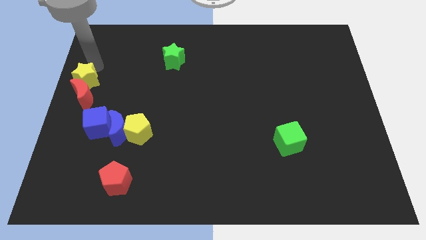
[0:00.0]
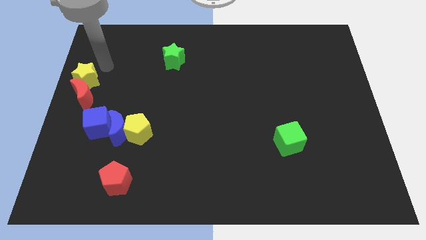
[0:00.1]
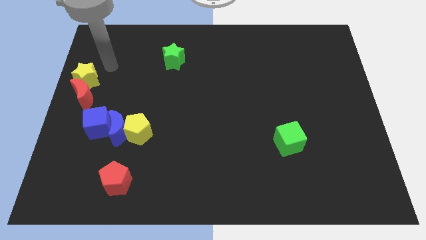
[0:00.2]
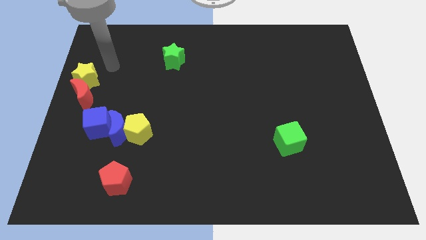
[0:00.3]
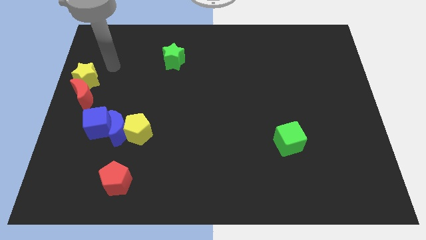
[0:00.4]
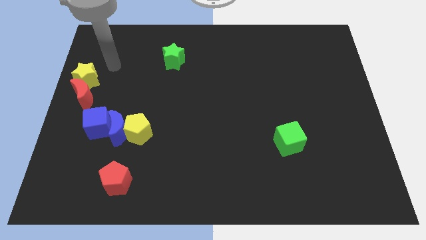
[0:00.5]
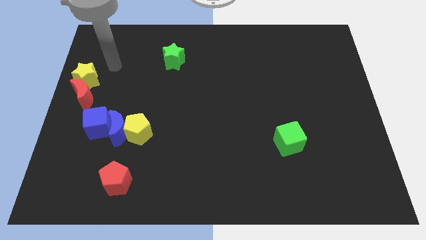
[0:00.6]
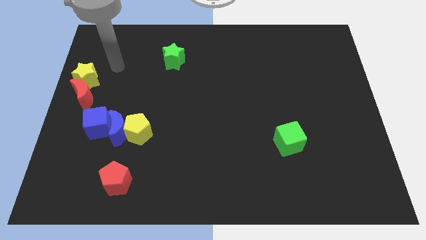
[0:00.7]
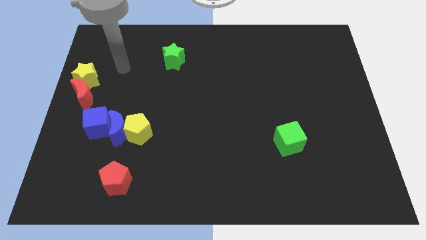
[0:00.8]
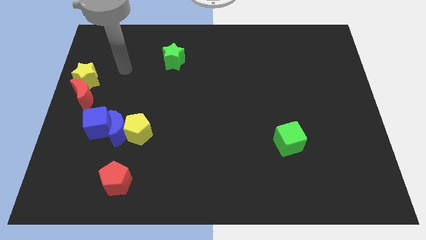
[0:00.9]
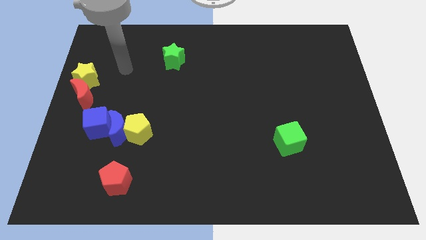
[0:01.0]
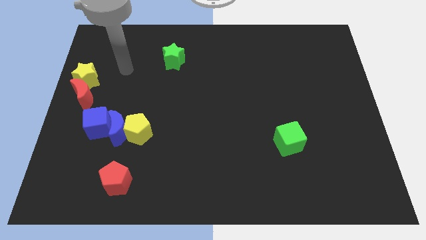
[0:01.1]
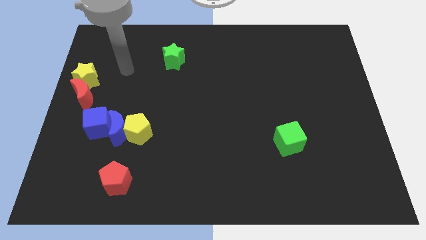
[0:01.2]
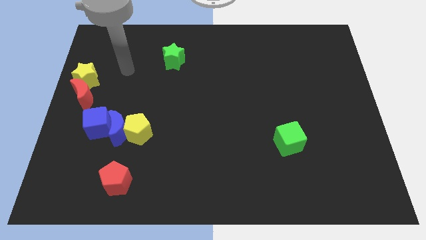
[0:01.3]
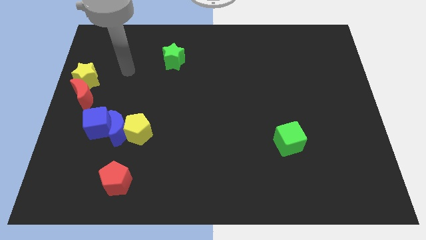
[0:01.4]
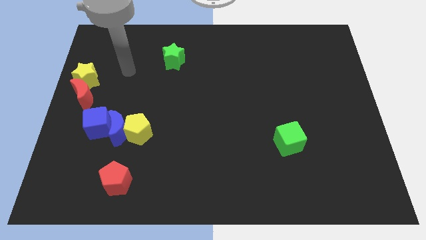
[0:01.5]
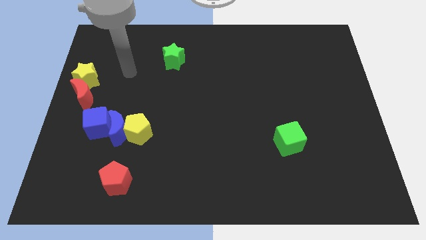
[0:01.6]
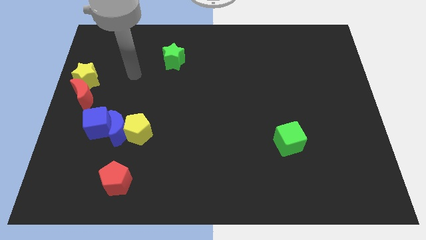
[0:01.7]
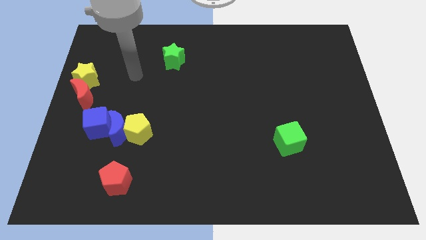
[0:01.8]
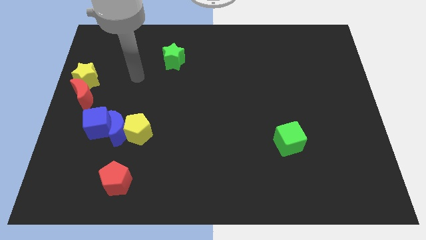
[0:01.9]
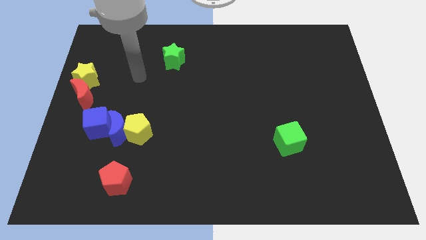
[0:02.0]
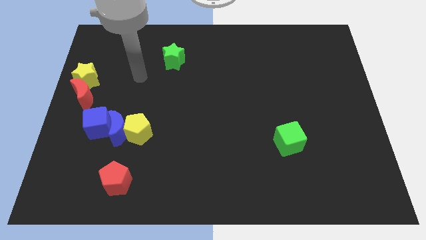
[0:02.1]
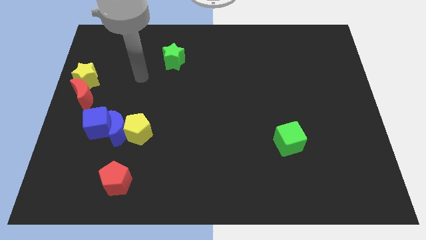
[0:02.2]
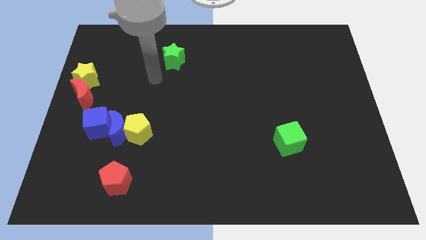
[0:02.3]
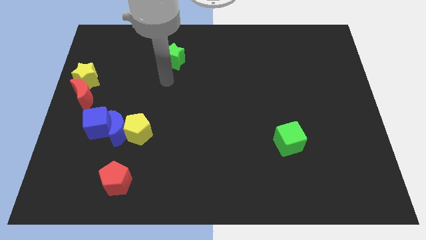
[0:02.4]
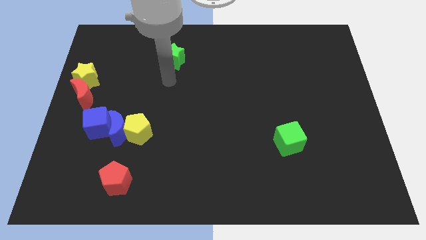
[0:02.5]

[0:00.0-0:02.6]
move your arm to the bottom of the green star

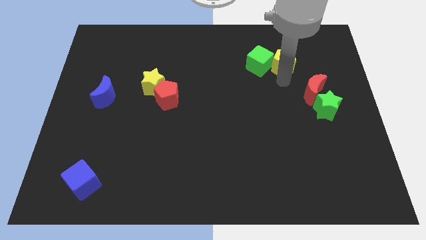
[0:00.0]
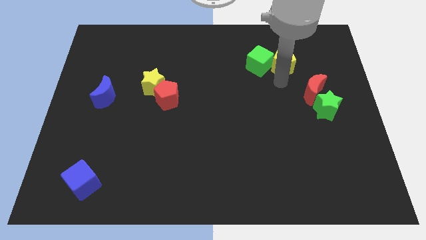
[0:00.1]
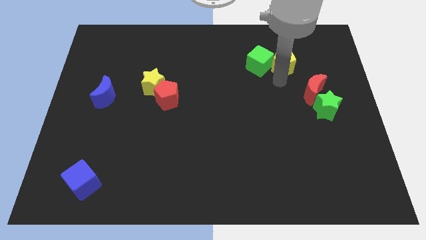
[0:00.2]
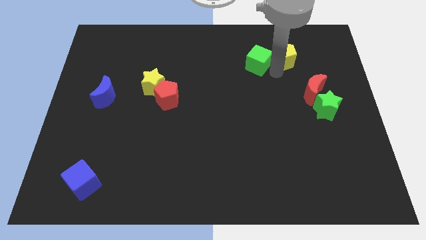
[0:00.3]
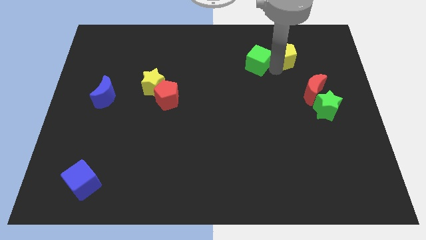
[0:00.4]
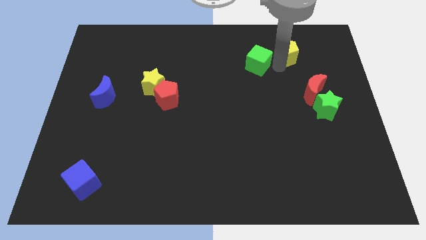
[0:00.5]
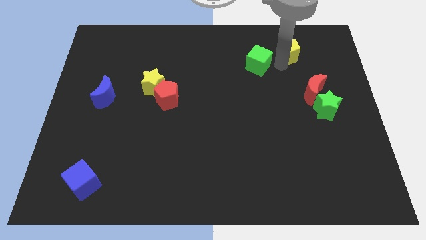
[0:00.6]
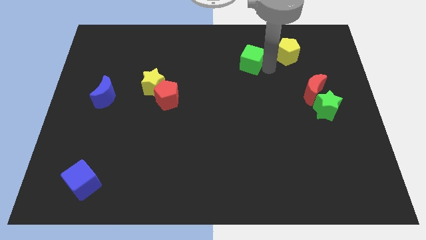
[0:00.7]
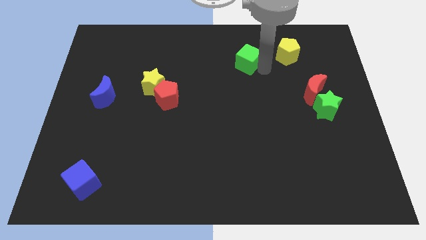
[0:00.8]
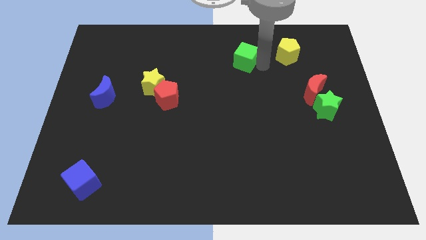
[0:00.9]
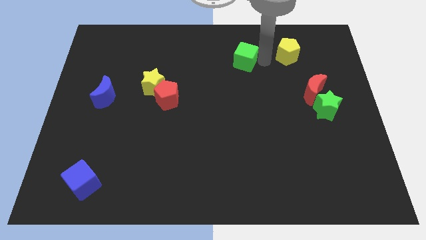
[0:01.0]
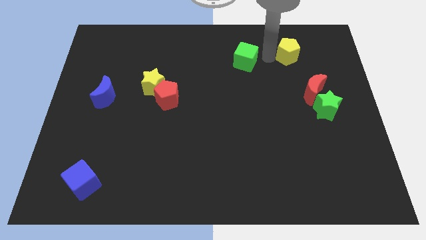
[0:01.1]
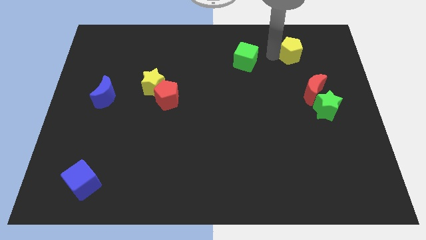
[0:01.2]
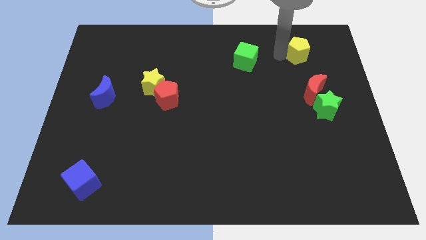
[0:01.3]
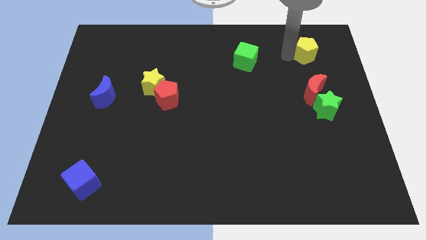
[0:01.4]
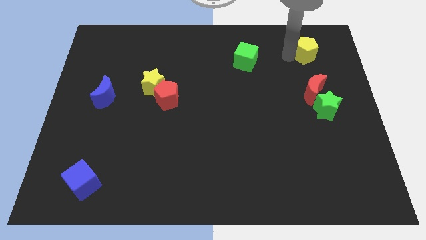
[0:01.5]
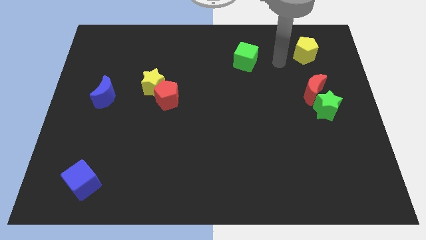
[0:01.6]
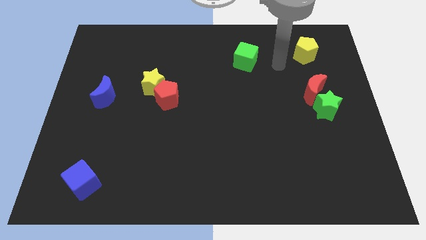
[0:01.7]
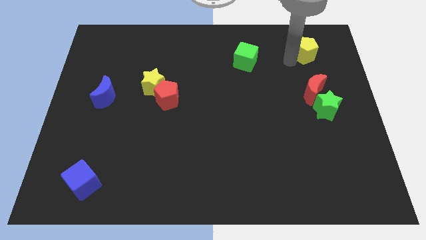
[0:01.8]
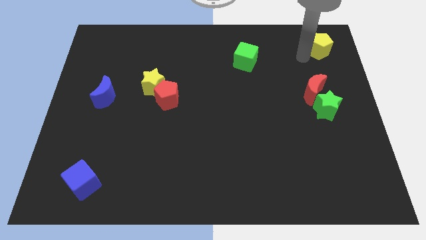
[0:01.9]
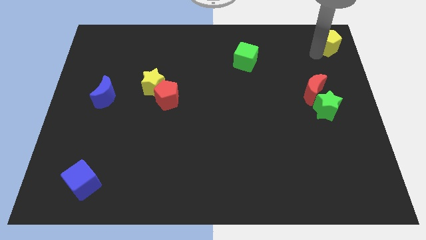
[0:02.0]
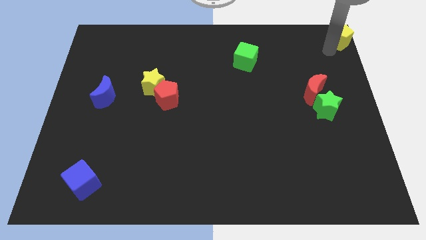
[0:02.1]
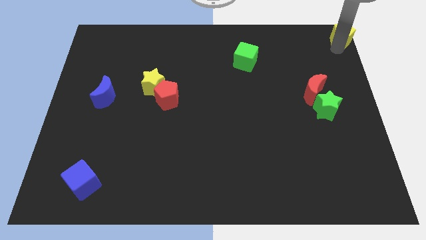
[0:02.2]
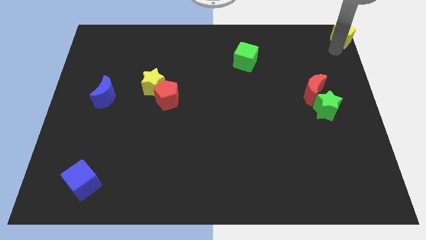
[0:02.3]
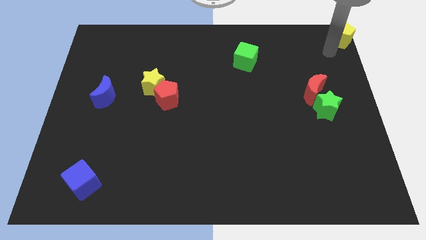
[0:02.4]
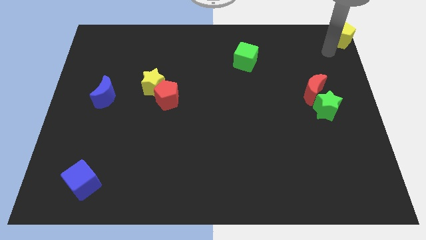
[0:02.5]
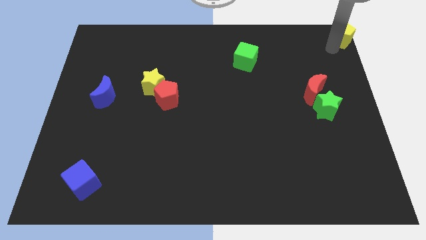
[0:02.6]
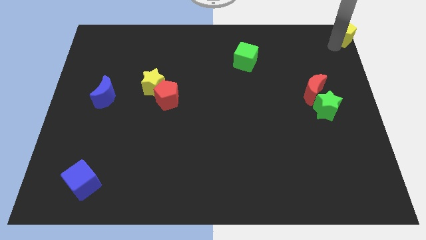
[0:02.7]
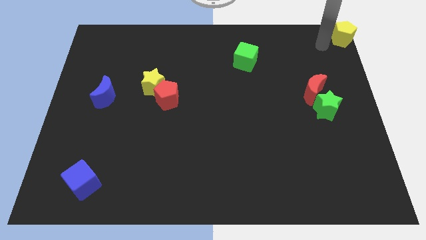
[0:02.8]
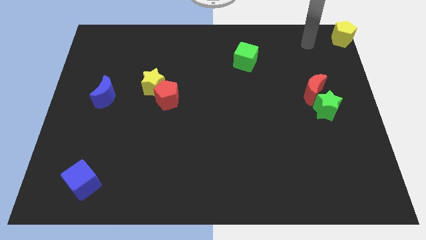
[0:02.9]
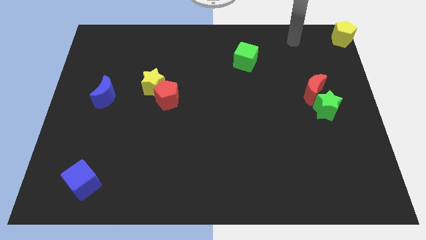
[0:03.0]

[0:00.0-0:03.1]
push the yellow pentagon to the top right corner of the board

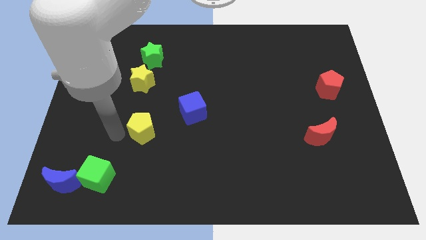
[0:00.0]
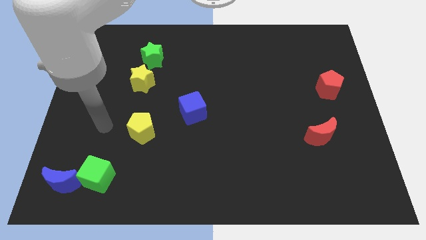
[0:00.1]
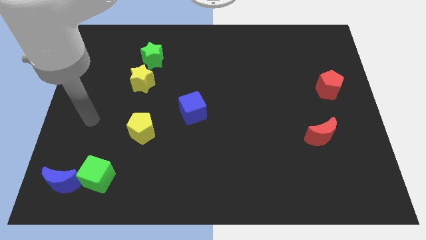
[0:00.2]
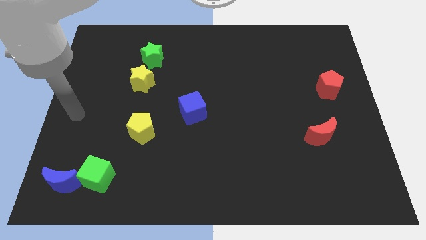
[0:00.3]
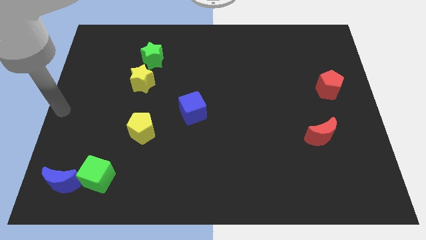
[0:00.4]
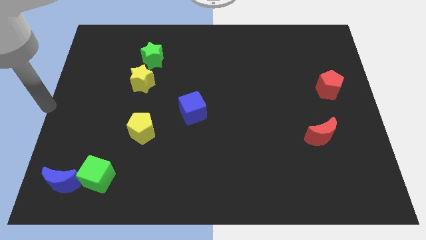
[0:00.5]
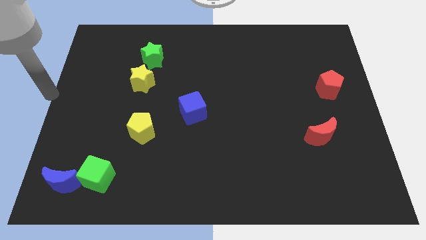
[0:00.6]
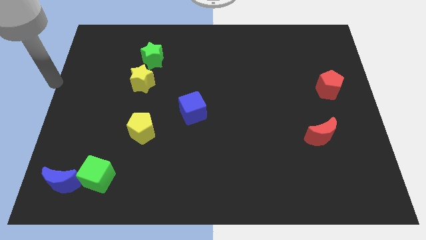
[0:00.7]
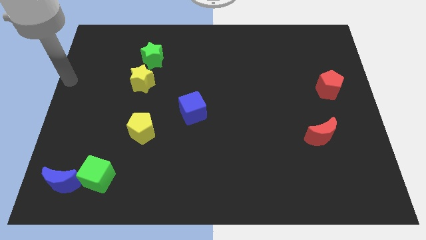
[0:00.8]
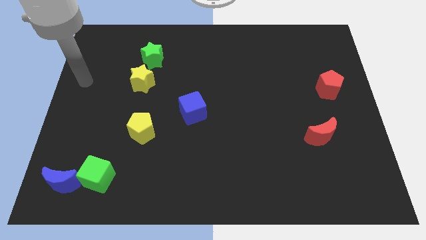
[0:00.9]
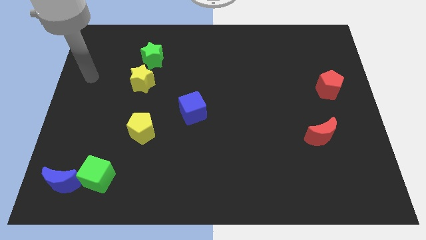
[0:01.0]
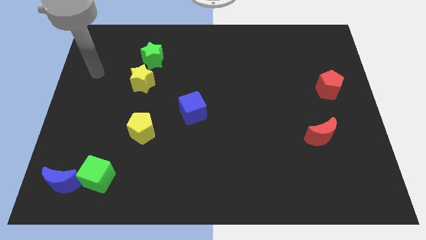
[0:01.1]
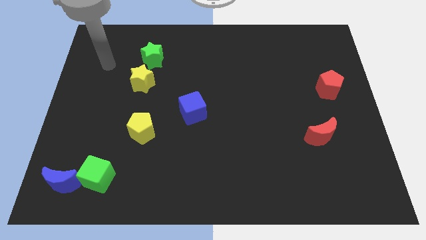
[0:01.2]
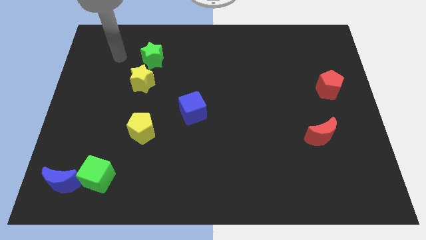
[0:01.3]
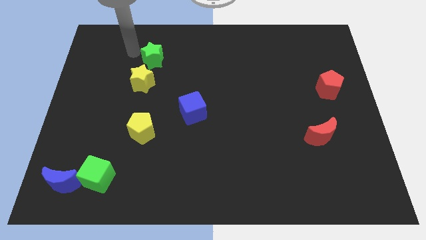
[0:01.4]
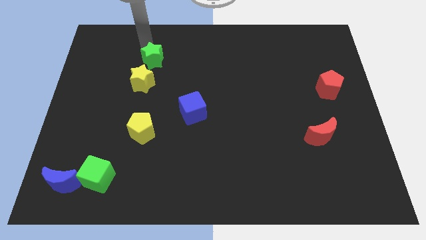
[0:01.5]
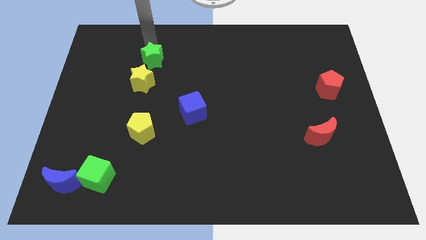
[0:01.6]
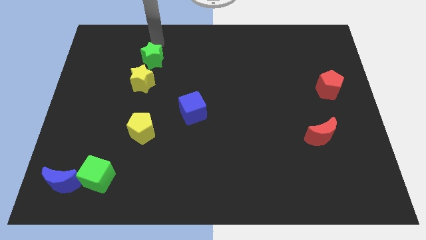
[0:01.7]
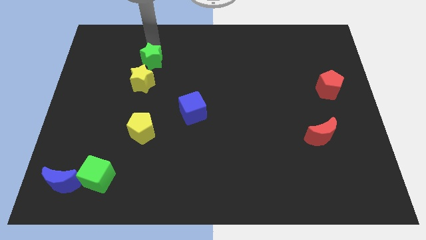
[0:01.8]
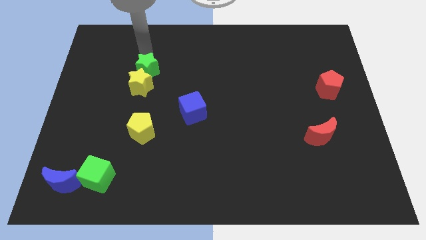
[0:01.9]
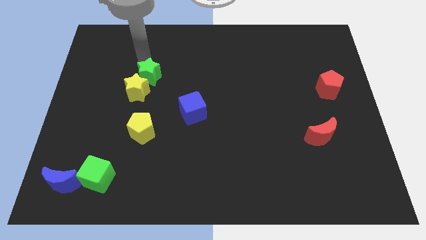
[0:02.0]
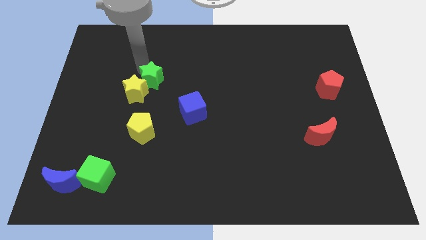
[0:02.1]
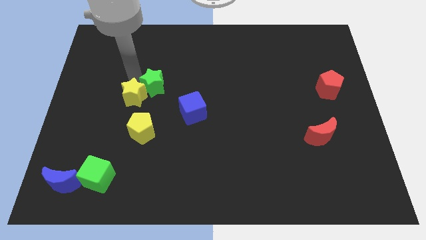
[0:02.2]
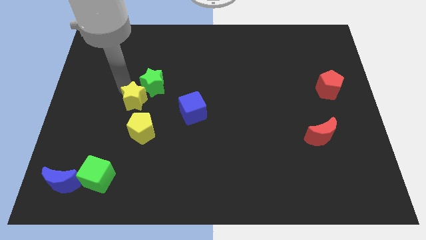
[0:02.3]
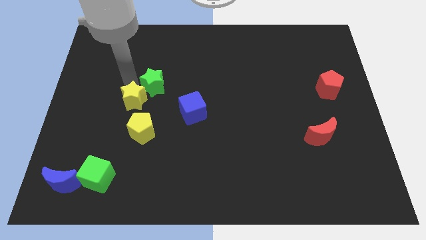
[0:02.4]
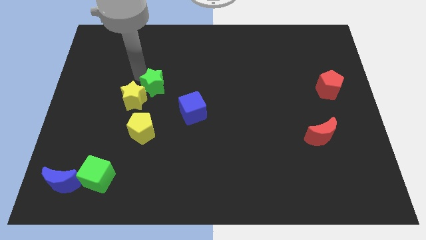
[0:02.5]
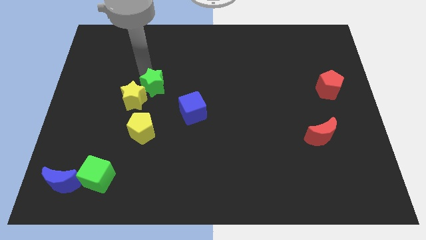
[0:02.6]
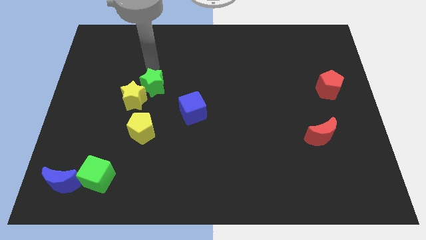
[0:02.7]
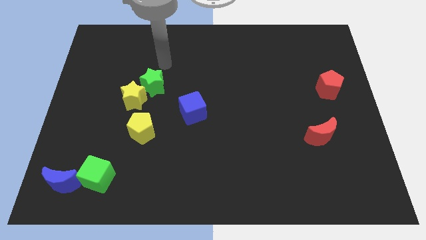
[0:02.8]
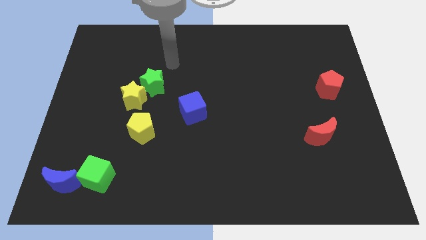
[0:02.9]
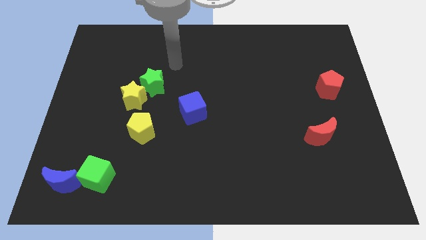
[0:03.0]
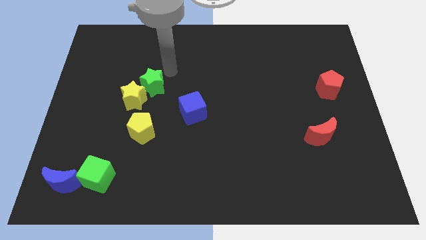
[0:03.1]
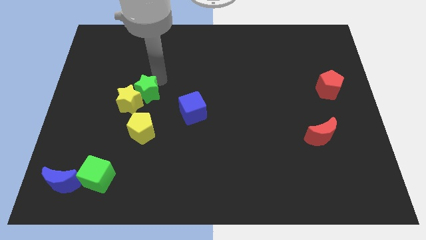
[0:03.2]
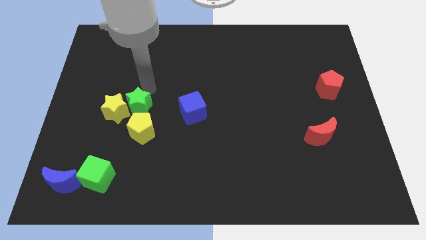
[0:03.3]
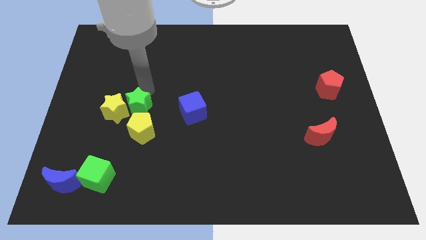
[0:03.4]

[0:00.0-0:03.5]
move the green star and yellow star to the top left side of the yellow pentagon
